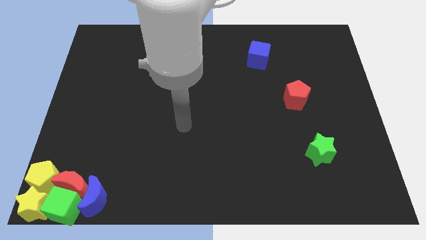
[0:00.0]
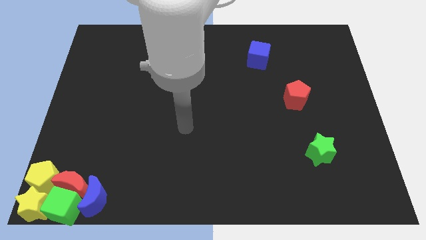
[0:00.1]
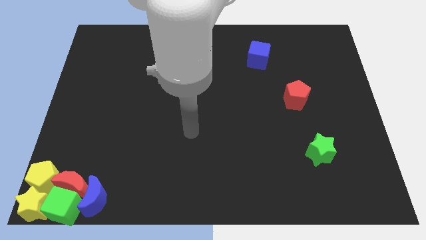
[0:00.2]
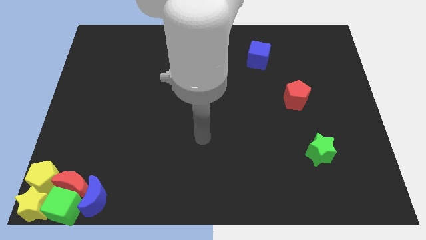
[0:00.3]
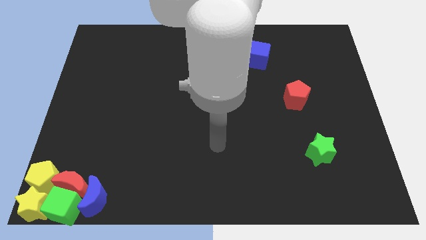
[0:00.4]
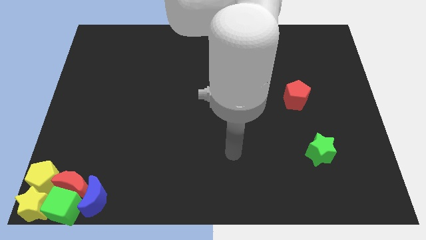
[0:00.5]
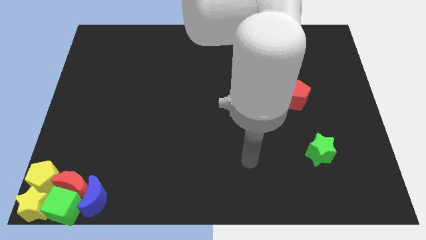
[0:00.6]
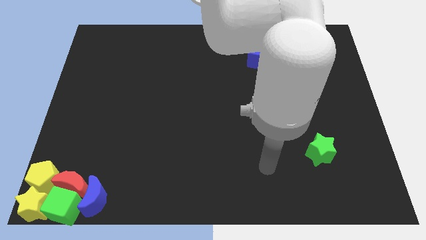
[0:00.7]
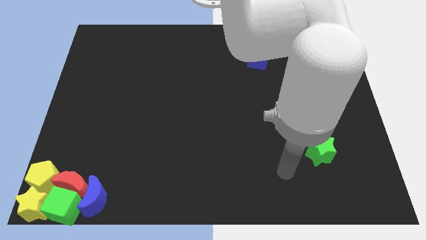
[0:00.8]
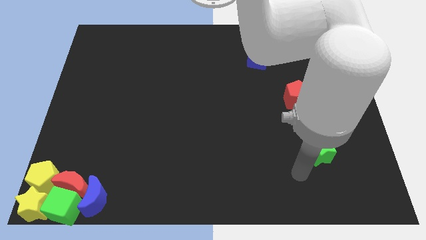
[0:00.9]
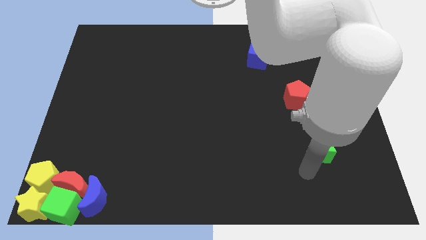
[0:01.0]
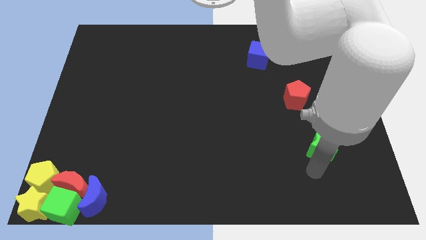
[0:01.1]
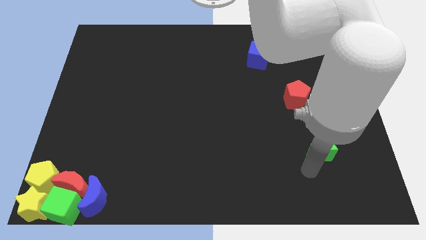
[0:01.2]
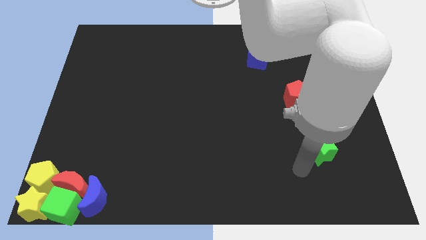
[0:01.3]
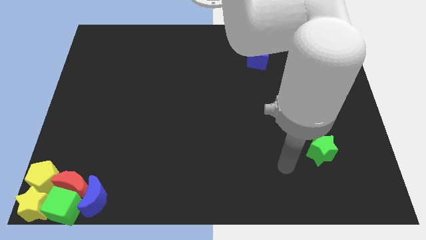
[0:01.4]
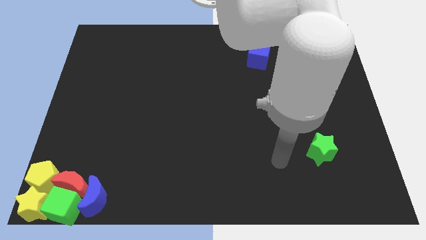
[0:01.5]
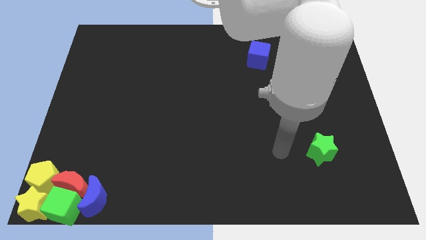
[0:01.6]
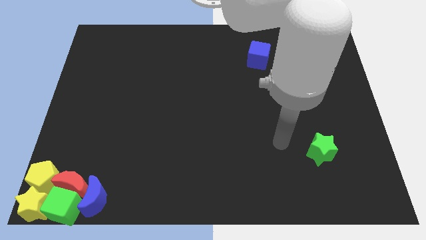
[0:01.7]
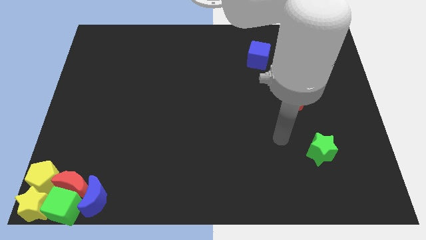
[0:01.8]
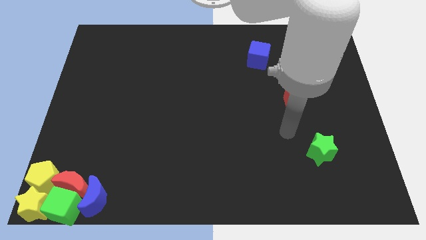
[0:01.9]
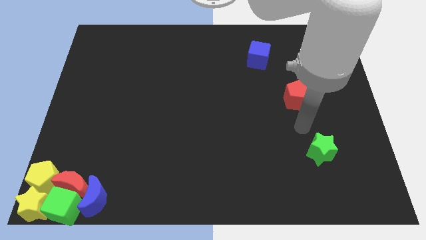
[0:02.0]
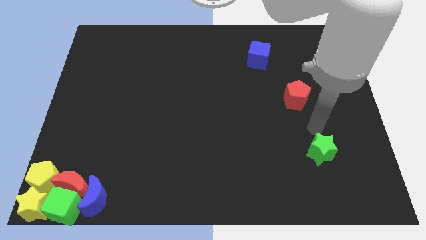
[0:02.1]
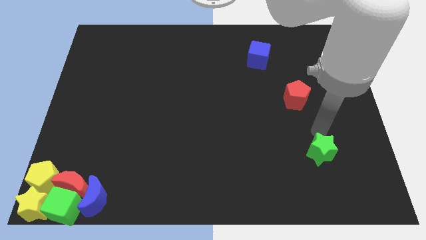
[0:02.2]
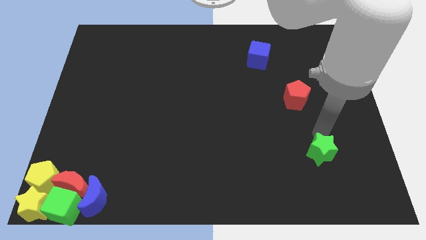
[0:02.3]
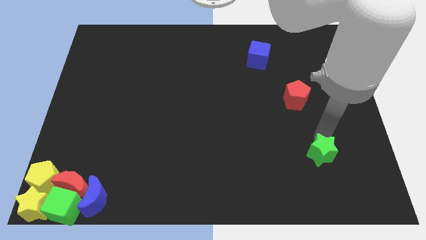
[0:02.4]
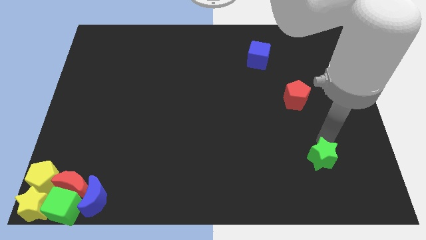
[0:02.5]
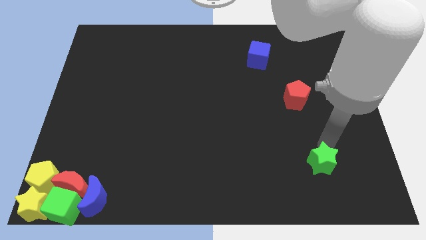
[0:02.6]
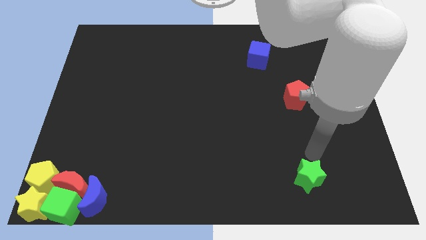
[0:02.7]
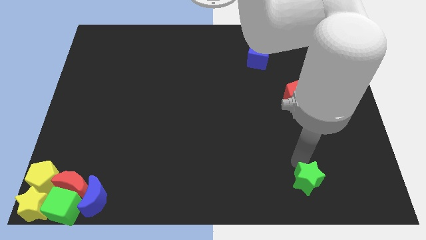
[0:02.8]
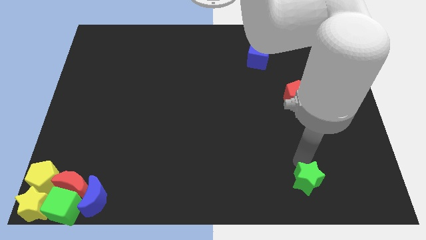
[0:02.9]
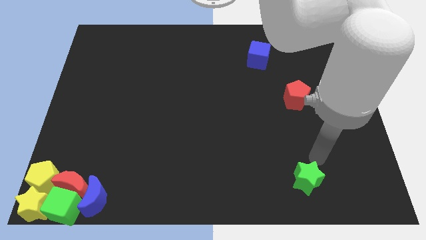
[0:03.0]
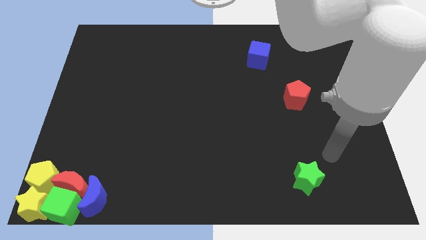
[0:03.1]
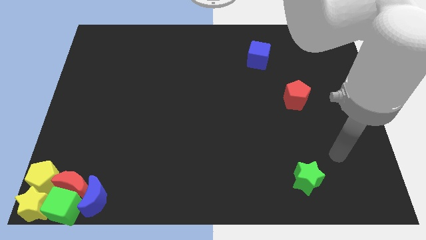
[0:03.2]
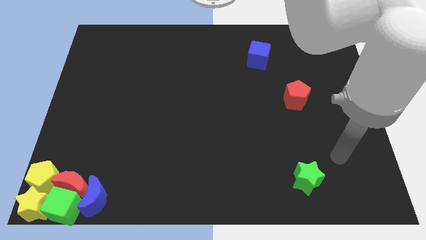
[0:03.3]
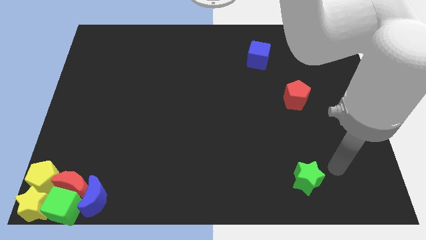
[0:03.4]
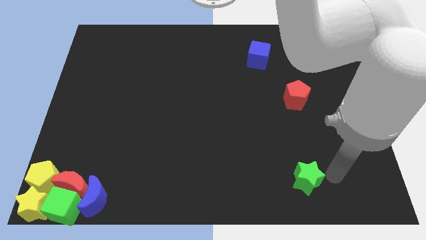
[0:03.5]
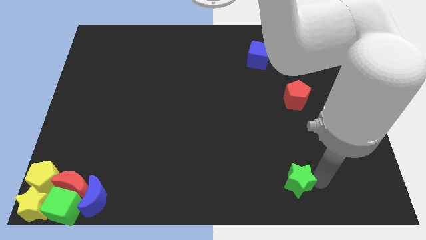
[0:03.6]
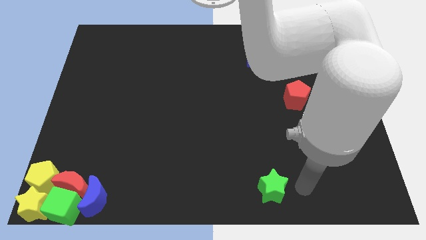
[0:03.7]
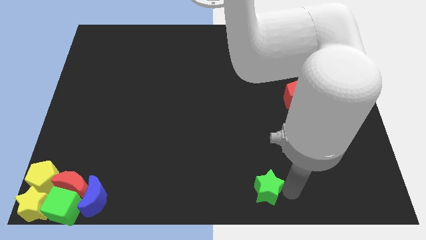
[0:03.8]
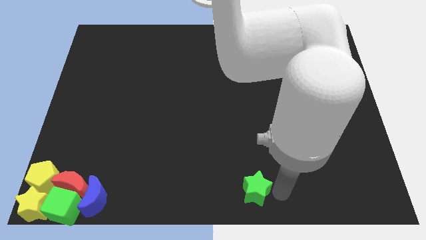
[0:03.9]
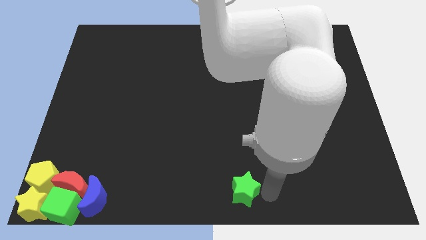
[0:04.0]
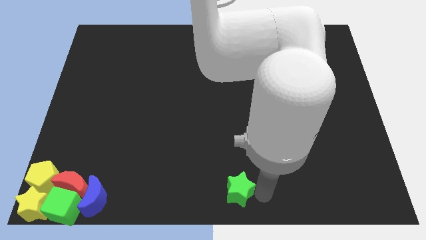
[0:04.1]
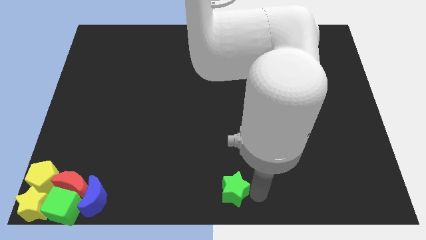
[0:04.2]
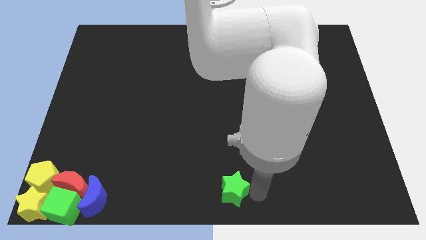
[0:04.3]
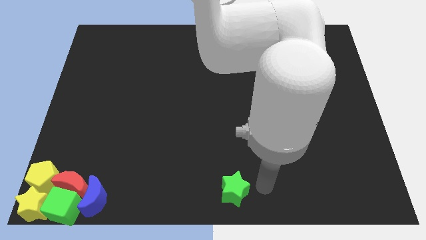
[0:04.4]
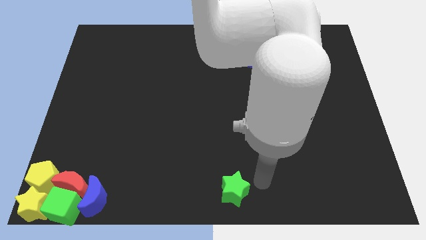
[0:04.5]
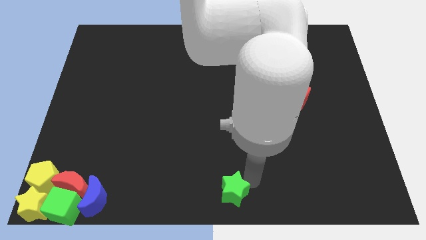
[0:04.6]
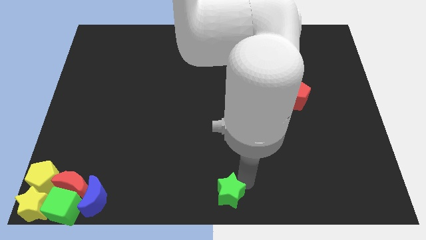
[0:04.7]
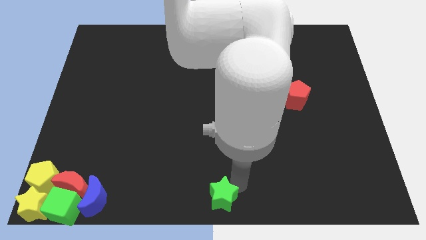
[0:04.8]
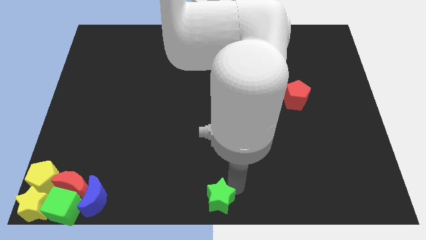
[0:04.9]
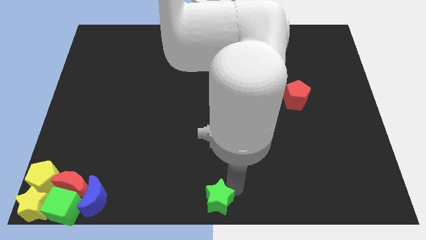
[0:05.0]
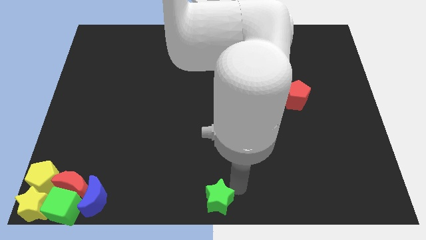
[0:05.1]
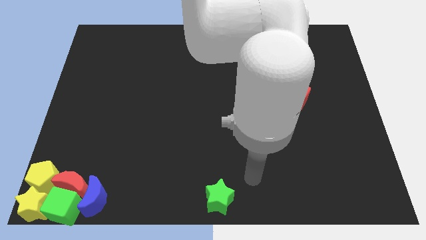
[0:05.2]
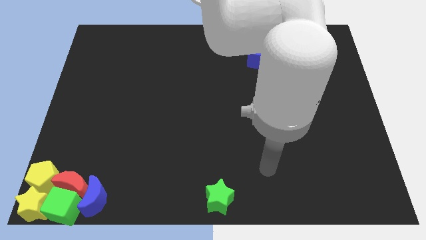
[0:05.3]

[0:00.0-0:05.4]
push the green star to the bottom center of the board

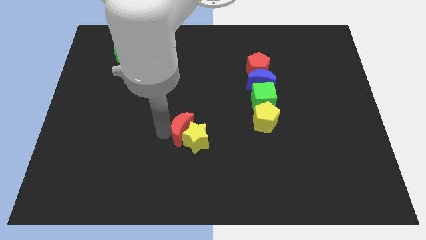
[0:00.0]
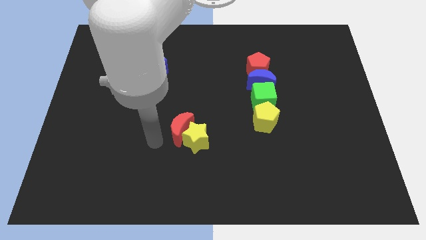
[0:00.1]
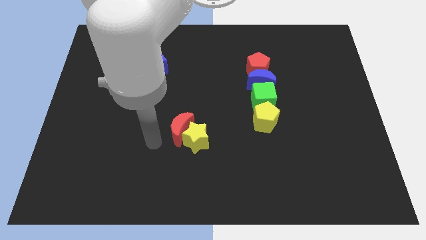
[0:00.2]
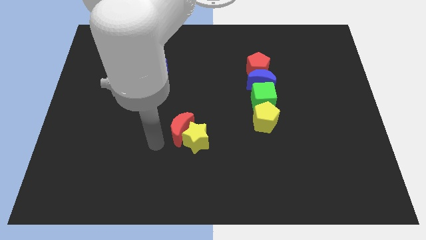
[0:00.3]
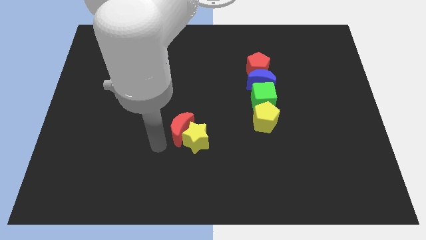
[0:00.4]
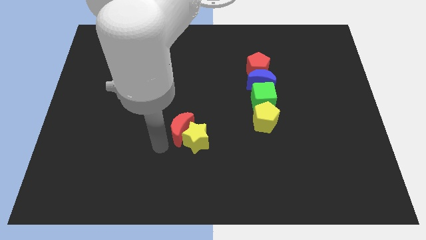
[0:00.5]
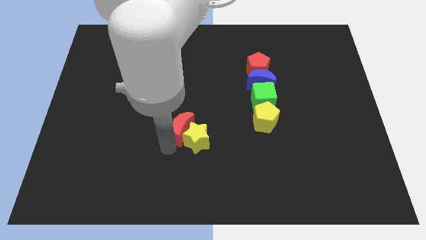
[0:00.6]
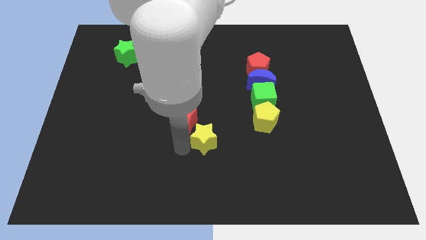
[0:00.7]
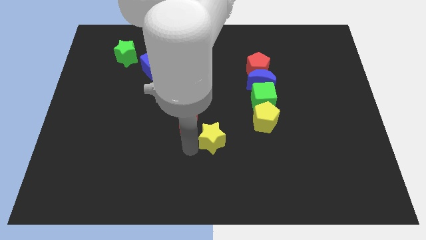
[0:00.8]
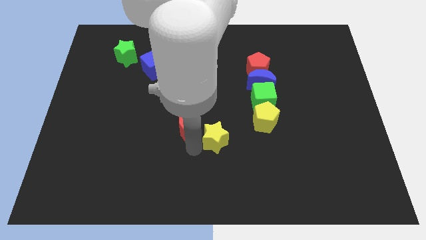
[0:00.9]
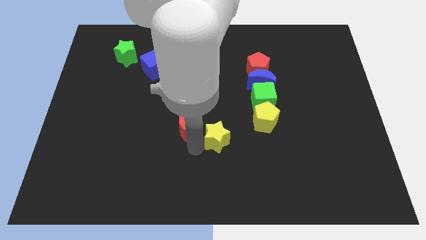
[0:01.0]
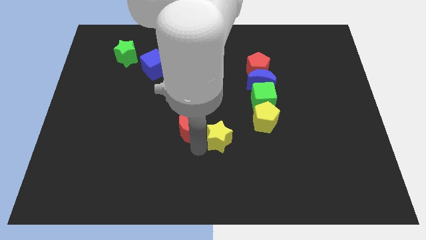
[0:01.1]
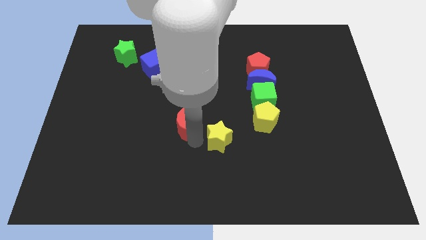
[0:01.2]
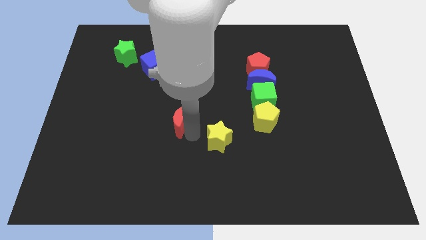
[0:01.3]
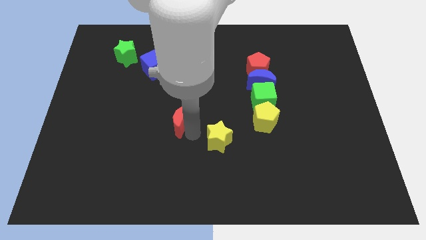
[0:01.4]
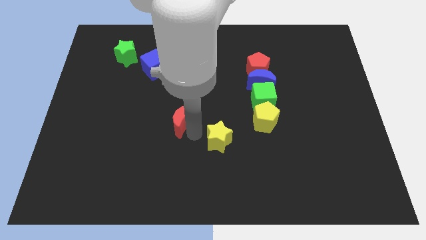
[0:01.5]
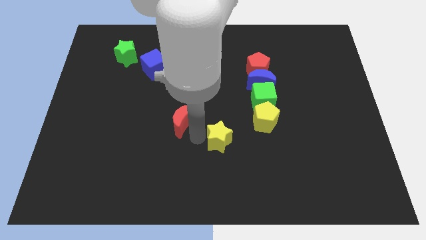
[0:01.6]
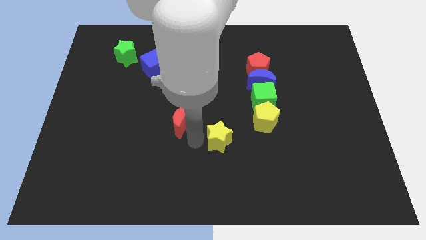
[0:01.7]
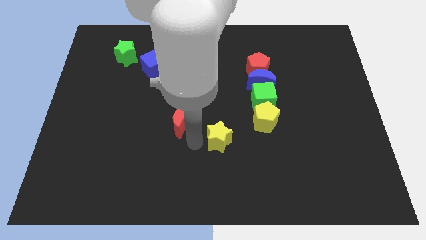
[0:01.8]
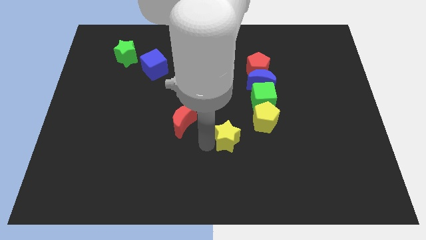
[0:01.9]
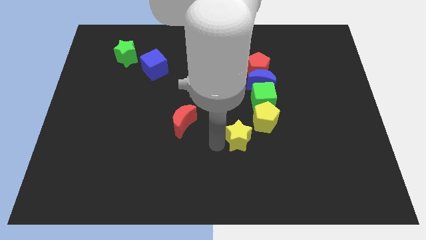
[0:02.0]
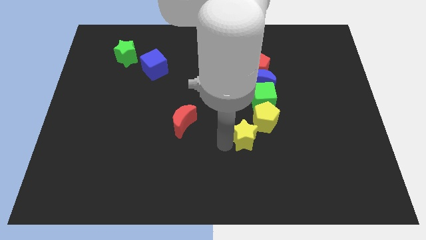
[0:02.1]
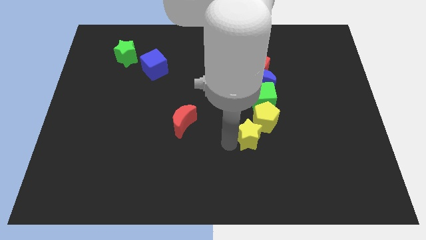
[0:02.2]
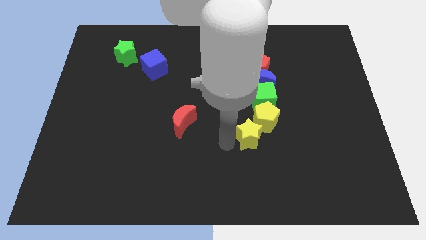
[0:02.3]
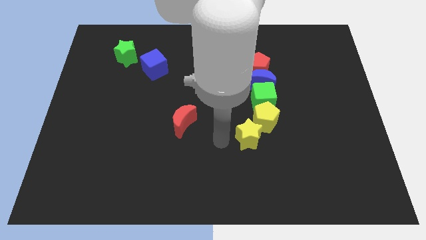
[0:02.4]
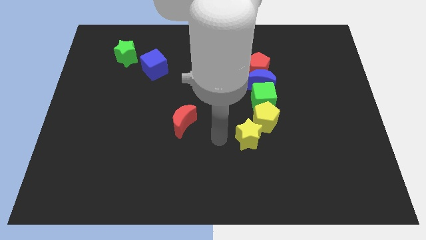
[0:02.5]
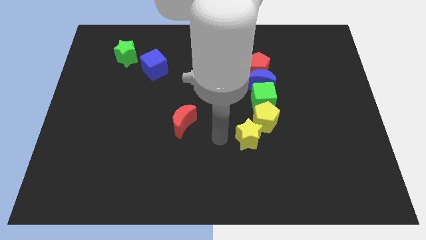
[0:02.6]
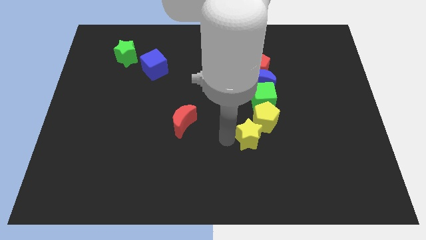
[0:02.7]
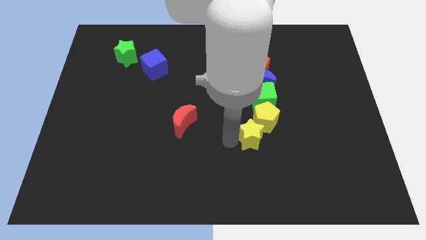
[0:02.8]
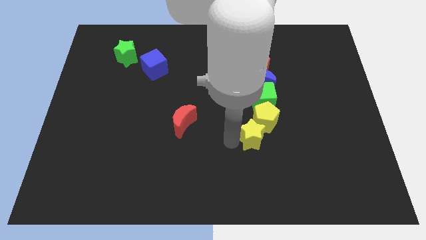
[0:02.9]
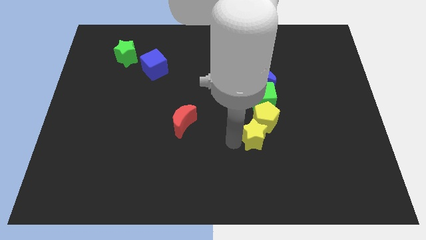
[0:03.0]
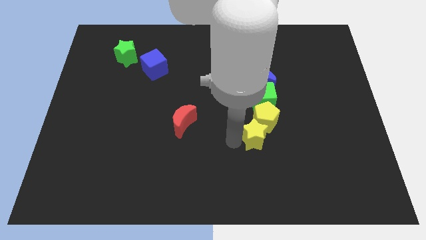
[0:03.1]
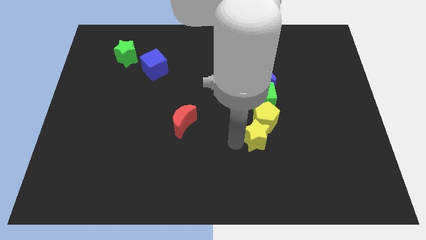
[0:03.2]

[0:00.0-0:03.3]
push the yellow star into the bottom side of the yellow pentagon

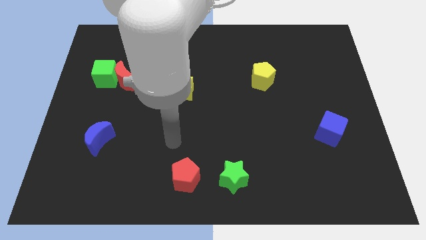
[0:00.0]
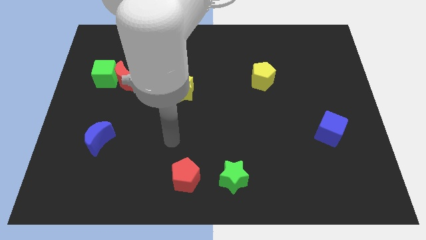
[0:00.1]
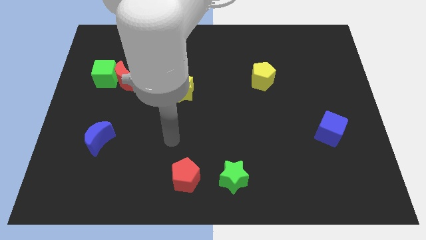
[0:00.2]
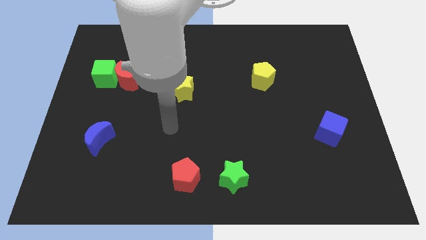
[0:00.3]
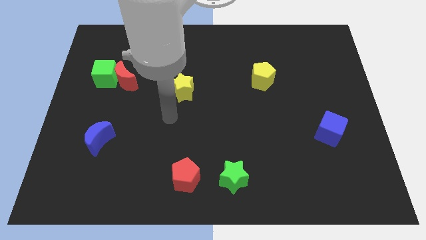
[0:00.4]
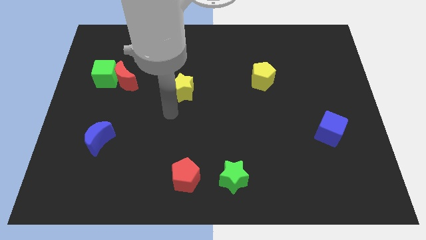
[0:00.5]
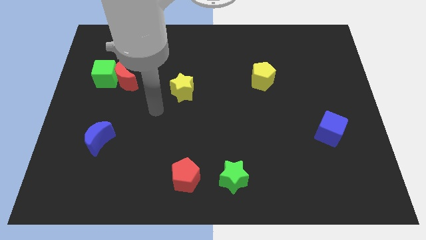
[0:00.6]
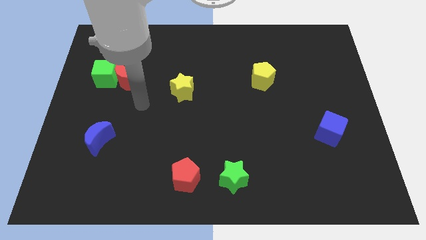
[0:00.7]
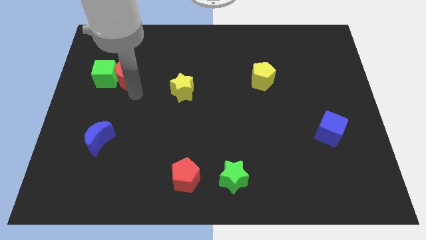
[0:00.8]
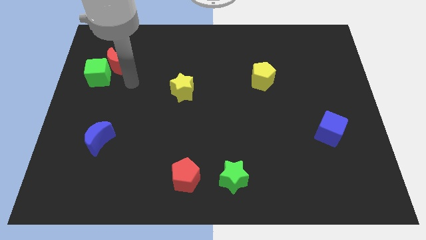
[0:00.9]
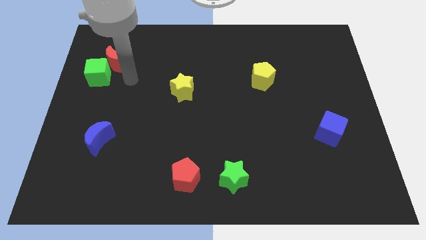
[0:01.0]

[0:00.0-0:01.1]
push red crescent slightly towards up
